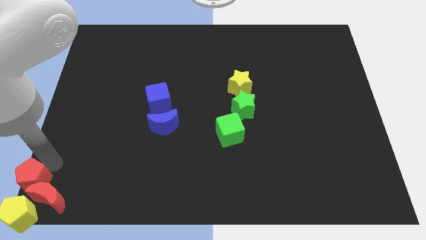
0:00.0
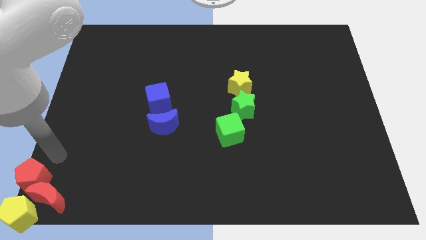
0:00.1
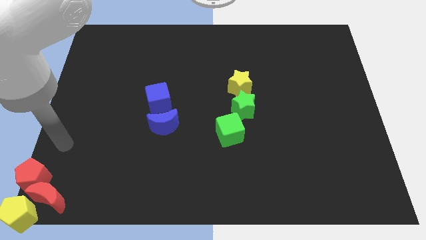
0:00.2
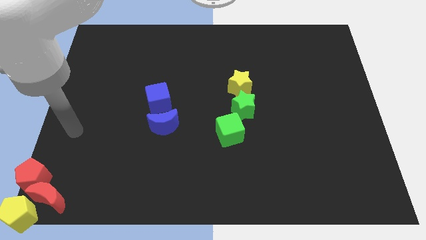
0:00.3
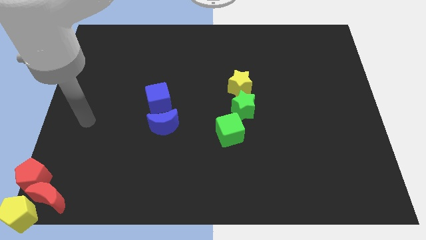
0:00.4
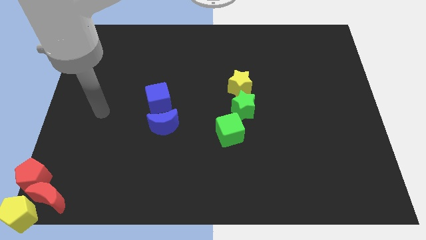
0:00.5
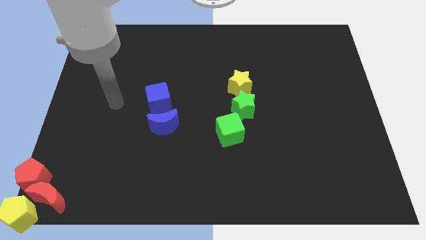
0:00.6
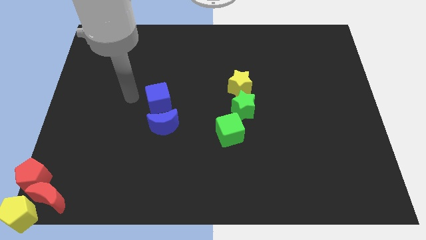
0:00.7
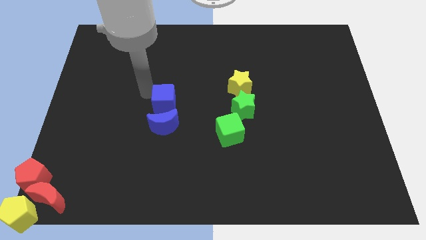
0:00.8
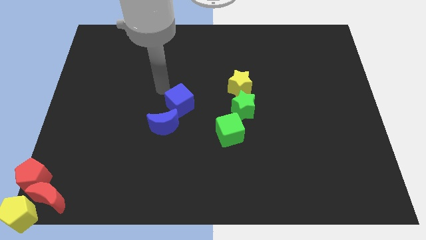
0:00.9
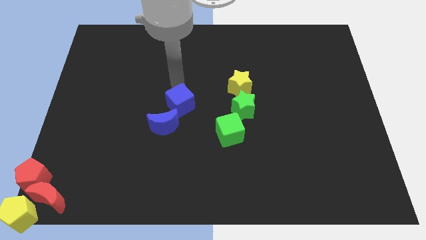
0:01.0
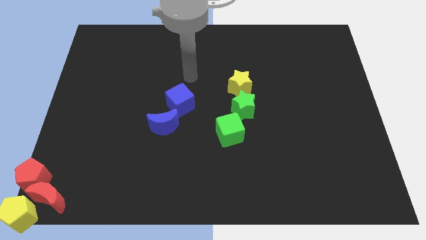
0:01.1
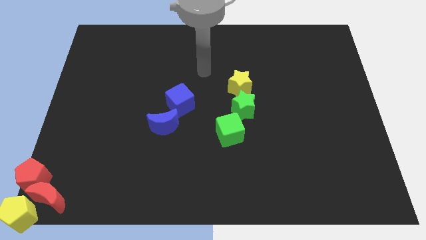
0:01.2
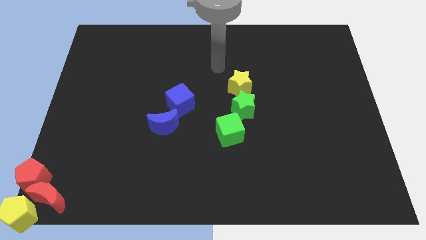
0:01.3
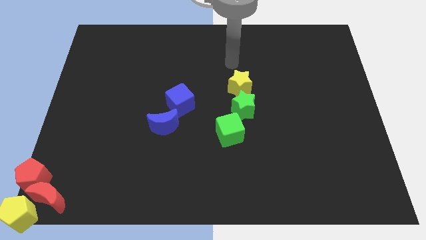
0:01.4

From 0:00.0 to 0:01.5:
push the blue cube diagonally to the top left of the green cube

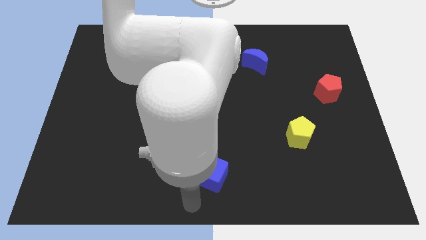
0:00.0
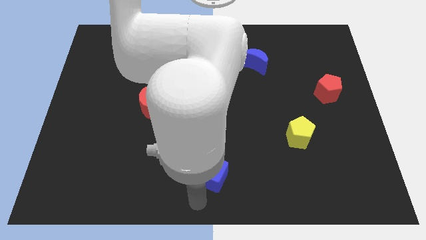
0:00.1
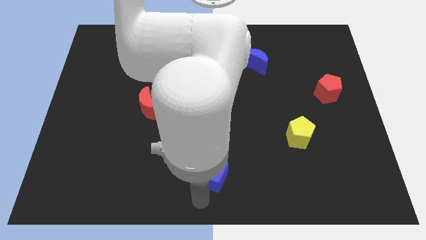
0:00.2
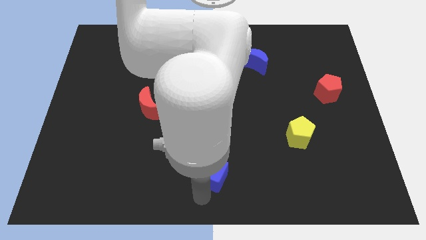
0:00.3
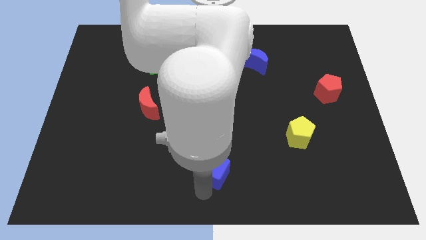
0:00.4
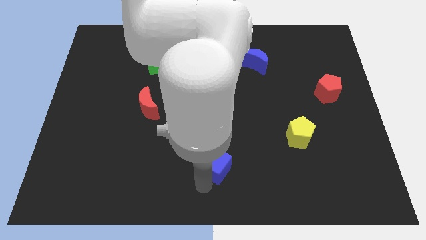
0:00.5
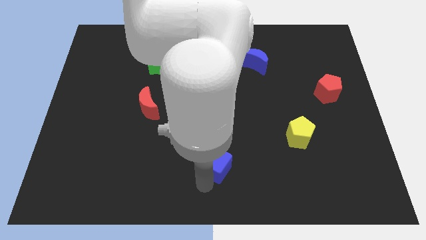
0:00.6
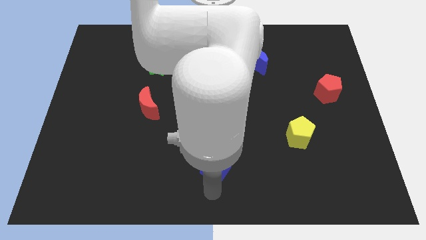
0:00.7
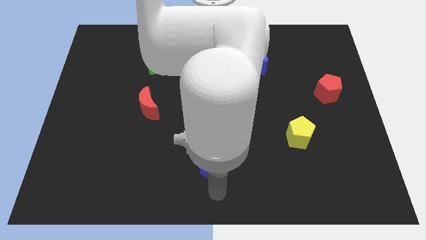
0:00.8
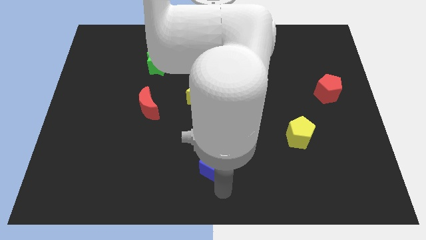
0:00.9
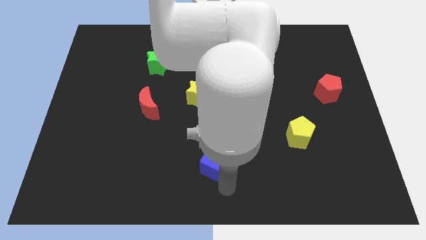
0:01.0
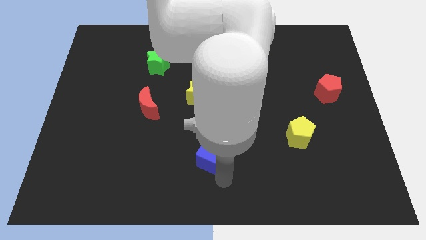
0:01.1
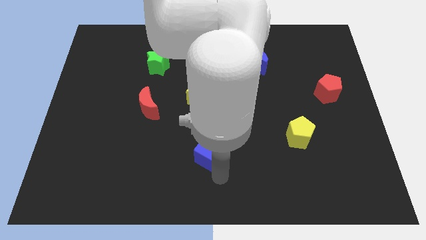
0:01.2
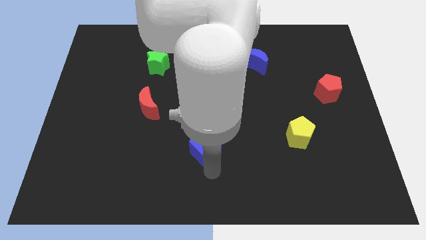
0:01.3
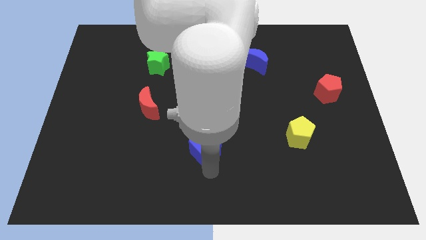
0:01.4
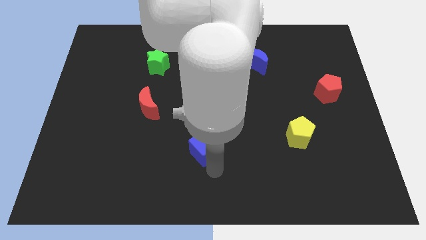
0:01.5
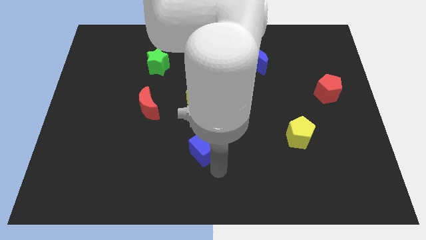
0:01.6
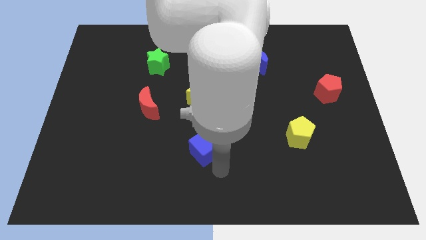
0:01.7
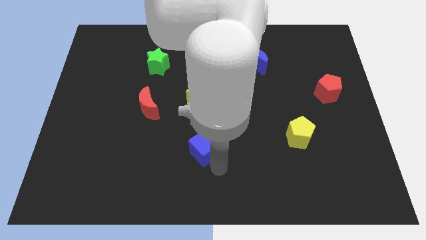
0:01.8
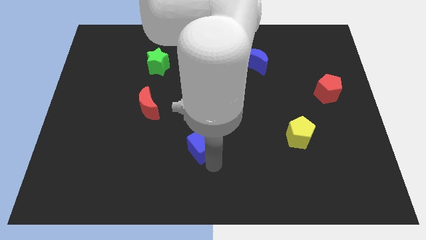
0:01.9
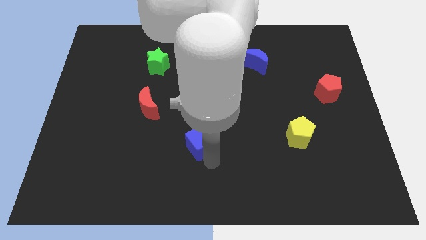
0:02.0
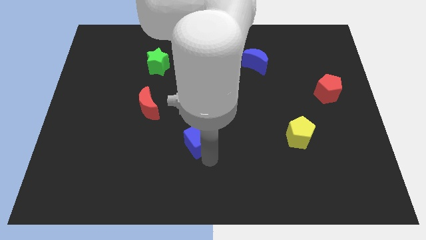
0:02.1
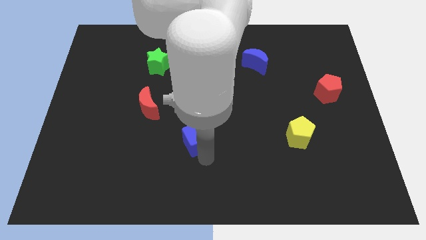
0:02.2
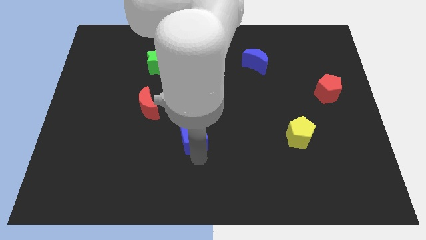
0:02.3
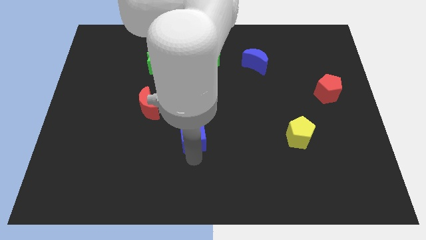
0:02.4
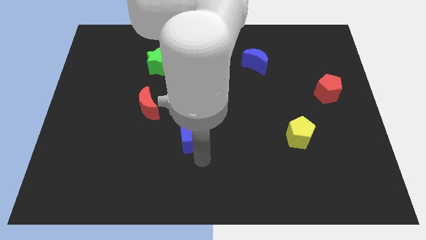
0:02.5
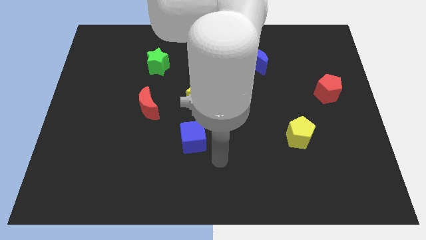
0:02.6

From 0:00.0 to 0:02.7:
place the blue cube below the yellow star

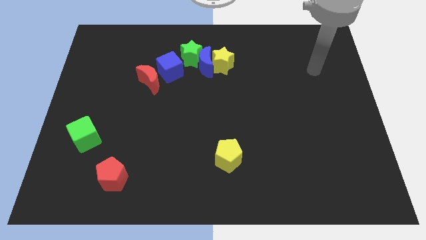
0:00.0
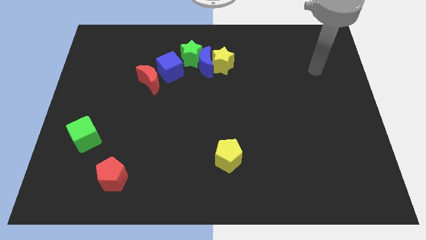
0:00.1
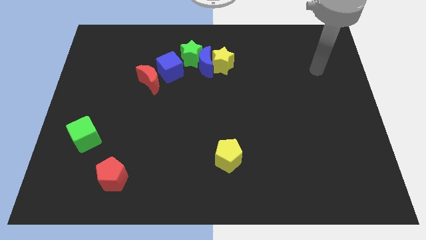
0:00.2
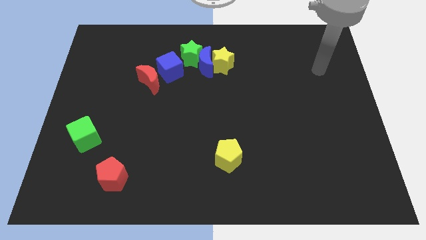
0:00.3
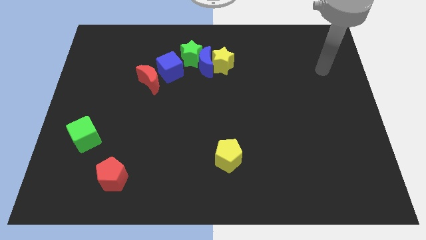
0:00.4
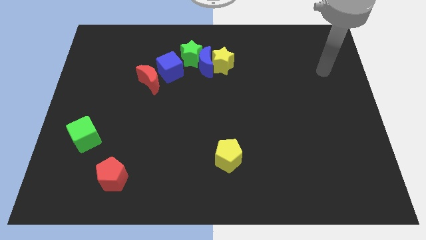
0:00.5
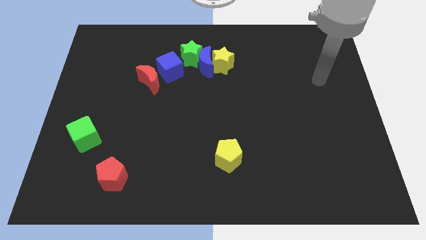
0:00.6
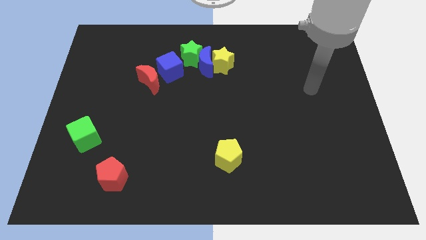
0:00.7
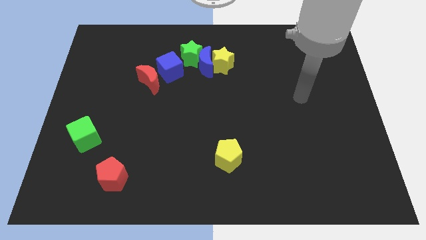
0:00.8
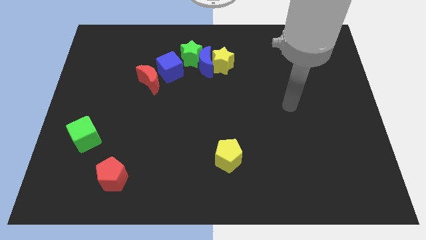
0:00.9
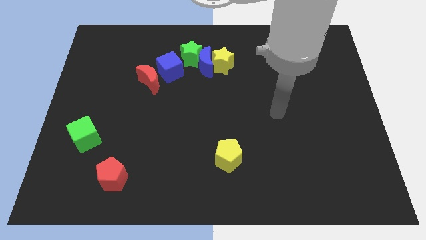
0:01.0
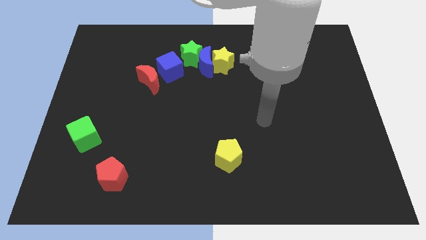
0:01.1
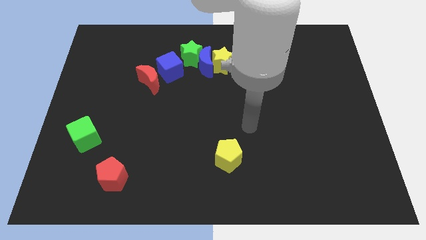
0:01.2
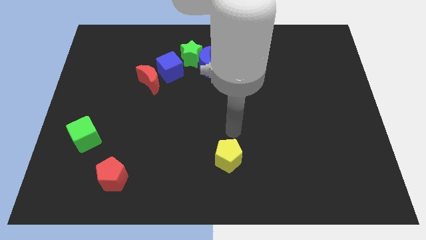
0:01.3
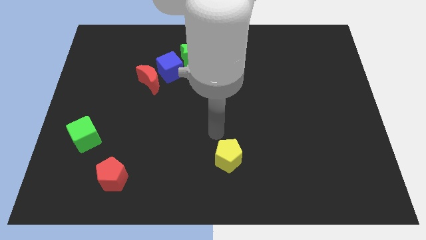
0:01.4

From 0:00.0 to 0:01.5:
place your arm at the top of the yellow pentagon

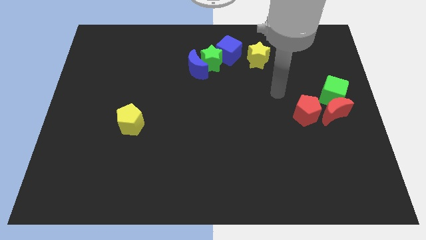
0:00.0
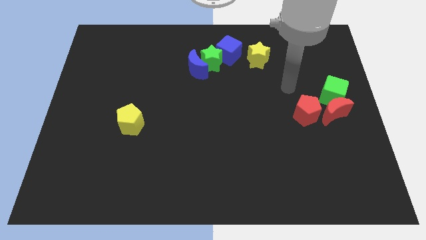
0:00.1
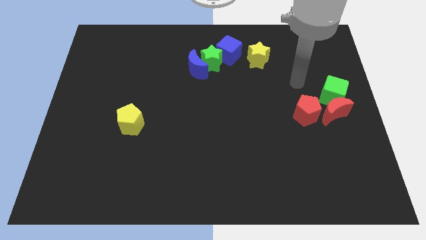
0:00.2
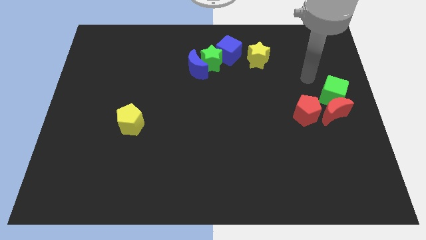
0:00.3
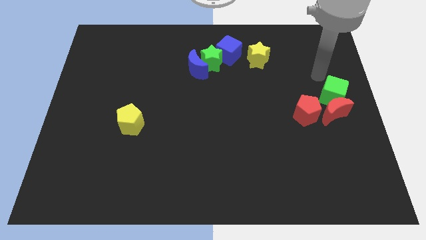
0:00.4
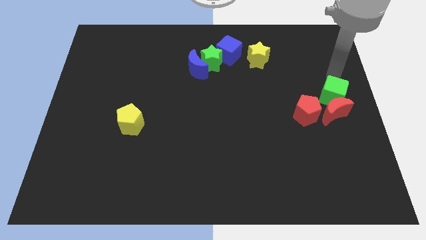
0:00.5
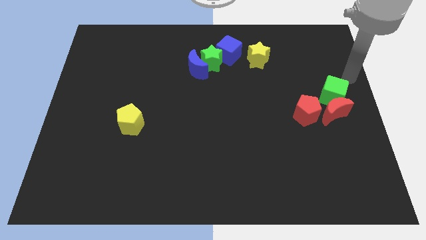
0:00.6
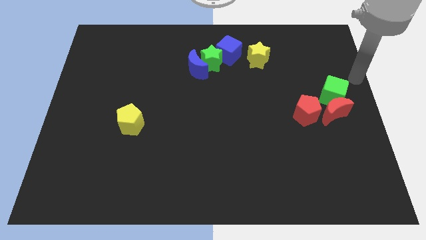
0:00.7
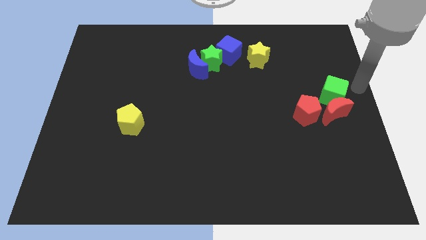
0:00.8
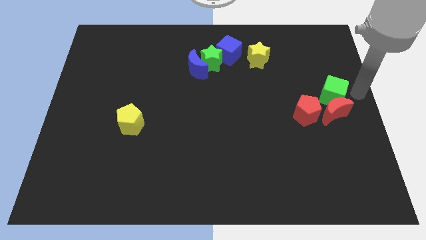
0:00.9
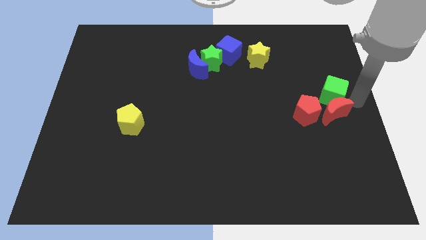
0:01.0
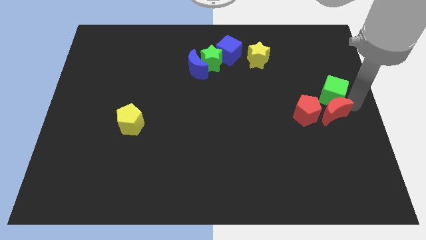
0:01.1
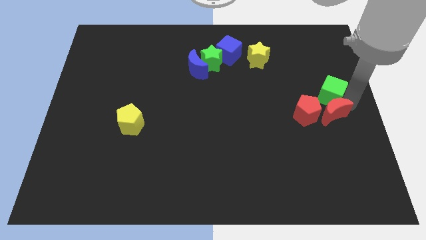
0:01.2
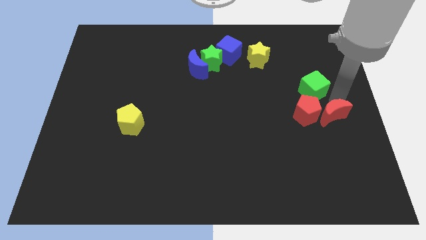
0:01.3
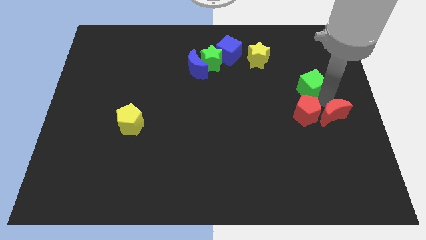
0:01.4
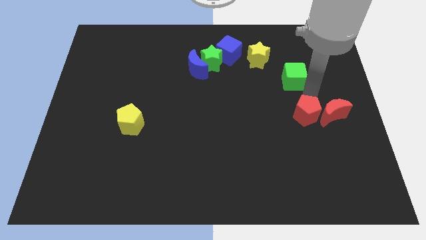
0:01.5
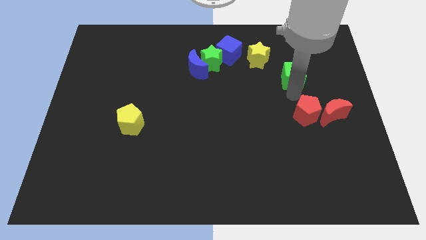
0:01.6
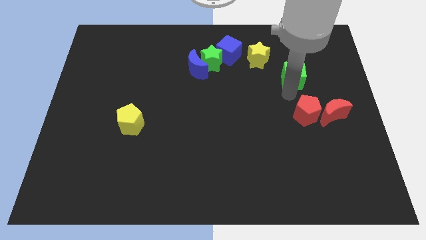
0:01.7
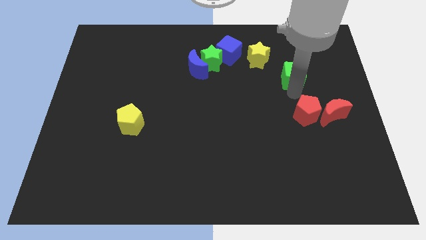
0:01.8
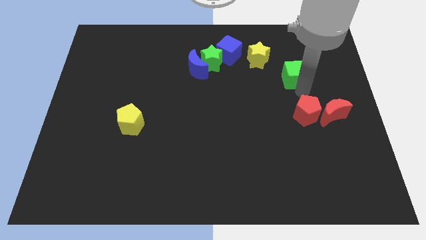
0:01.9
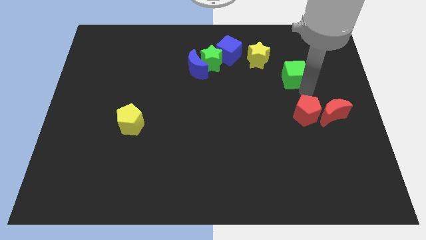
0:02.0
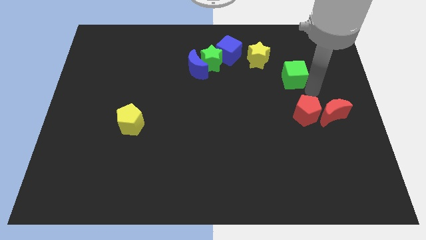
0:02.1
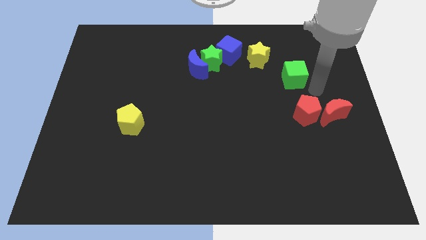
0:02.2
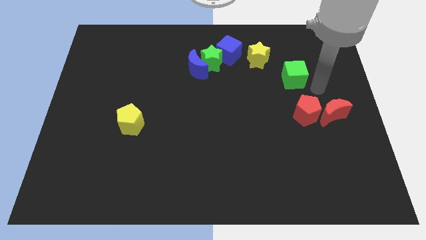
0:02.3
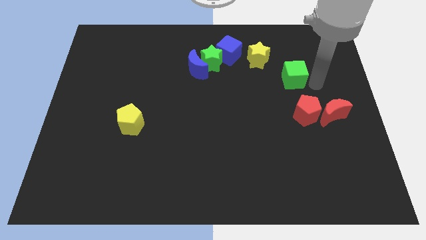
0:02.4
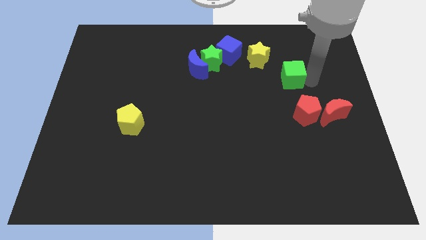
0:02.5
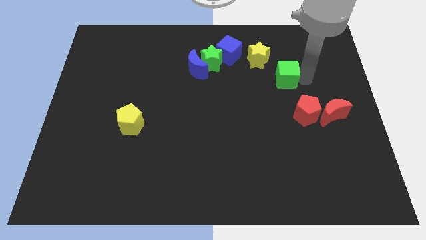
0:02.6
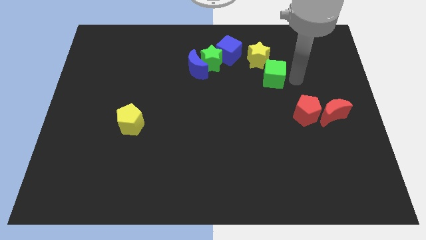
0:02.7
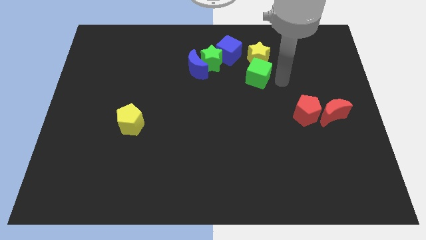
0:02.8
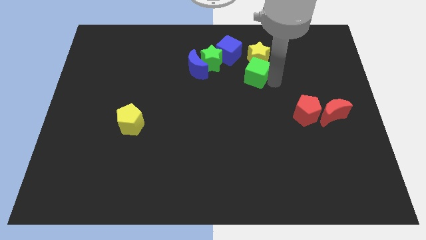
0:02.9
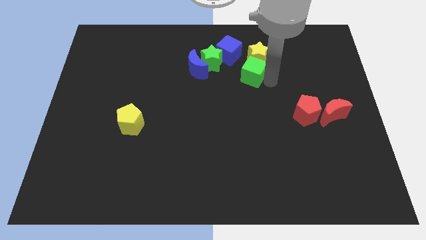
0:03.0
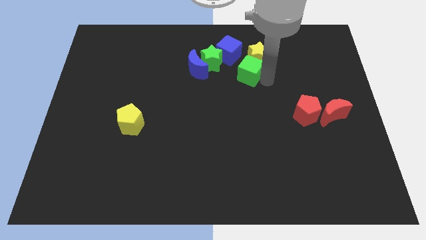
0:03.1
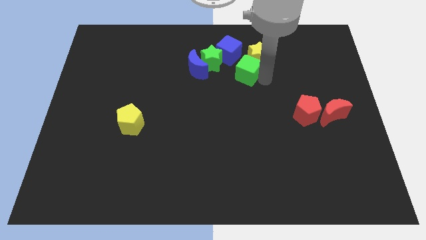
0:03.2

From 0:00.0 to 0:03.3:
place the green cube below the blue cube
